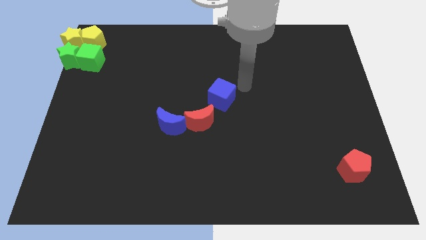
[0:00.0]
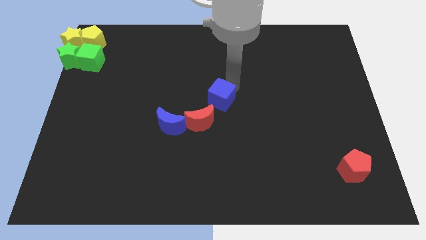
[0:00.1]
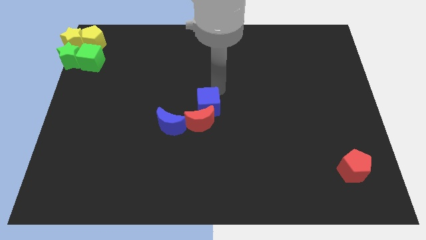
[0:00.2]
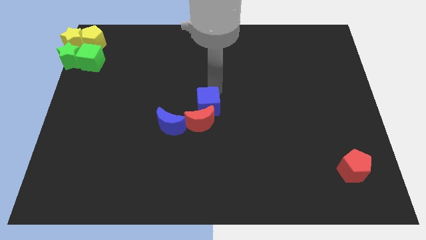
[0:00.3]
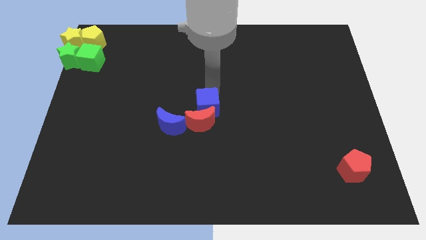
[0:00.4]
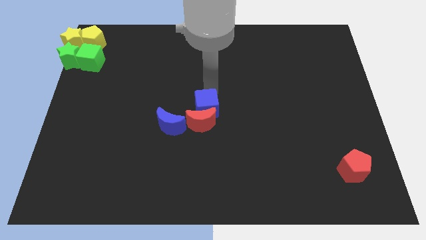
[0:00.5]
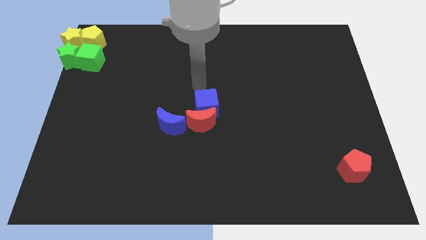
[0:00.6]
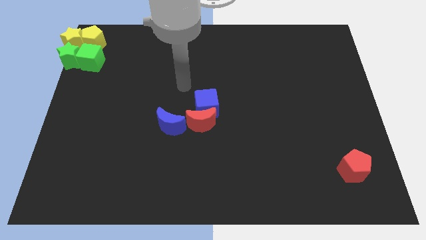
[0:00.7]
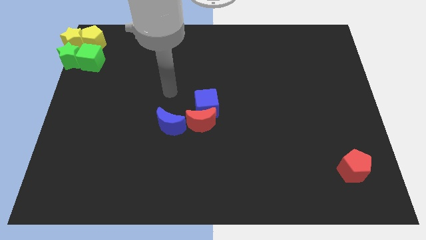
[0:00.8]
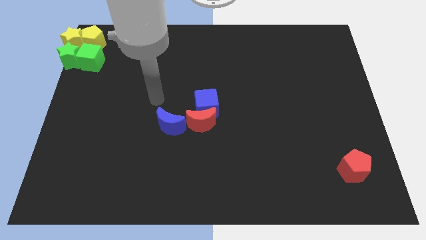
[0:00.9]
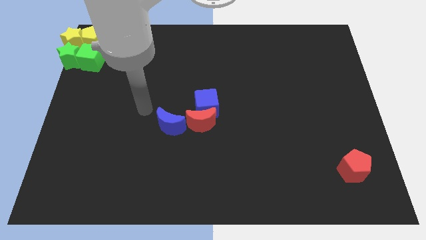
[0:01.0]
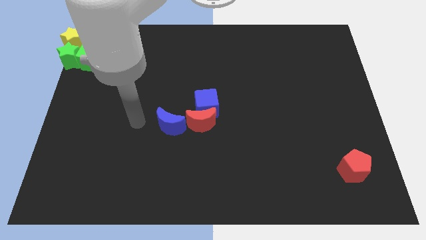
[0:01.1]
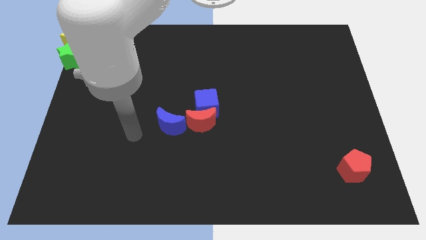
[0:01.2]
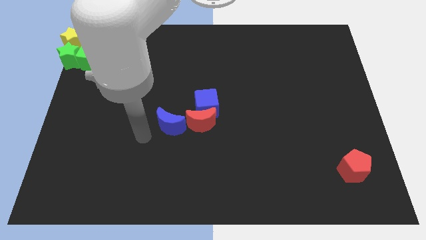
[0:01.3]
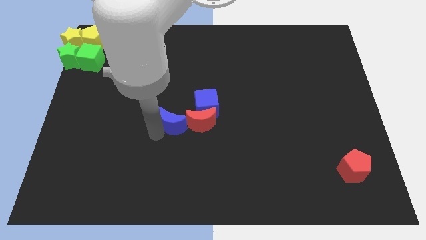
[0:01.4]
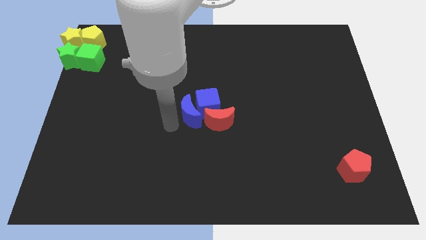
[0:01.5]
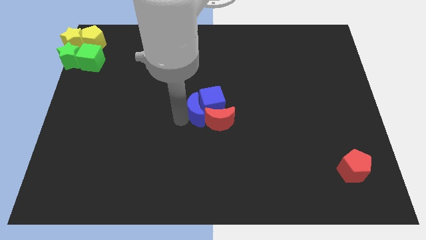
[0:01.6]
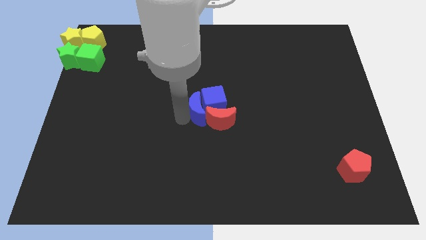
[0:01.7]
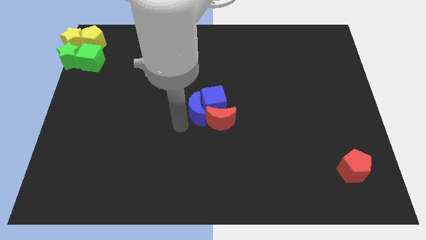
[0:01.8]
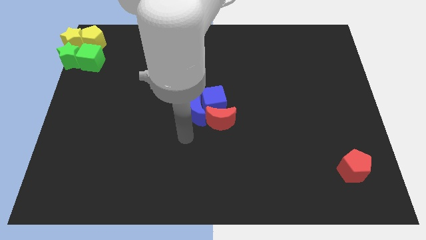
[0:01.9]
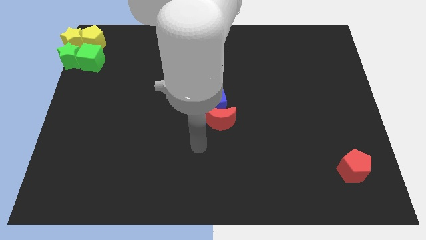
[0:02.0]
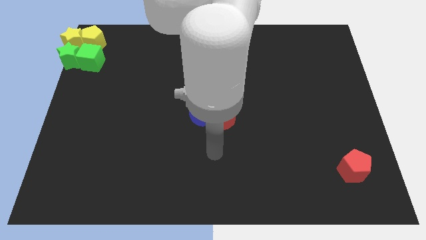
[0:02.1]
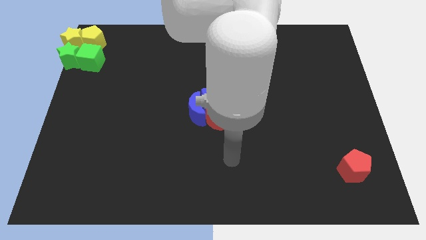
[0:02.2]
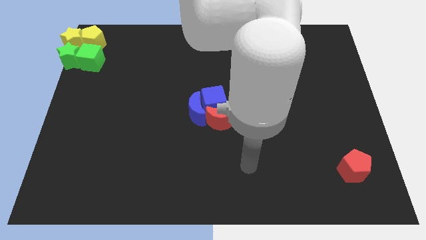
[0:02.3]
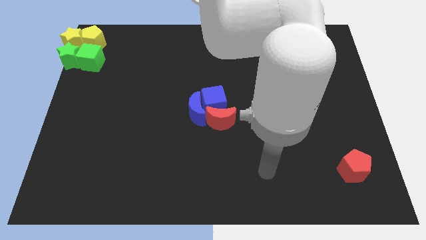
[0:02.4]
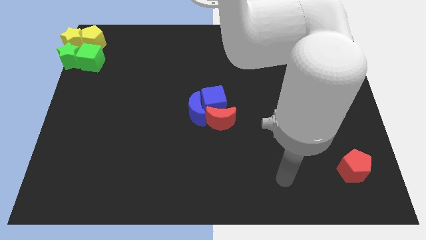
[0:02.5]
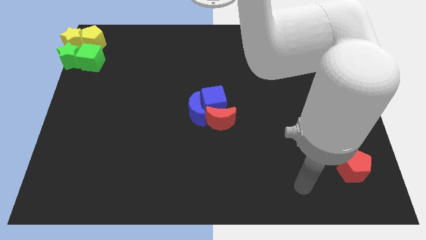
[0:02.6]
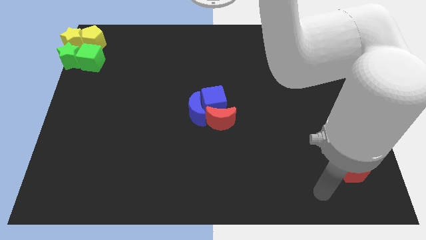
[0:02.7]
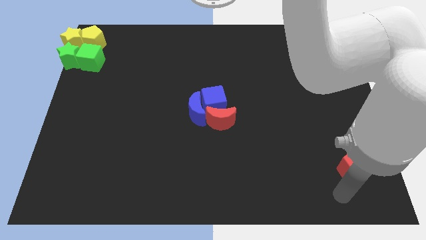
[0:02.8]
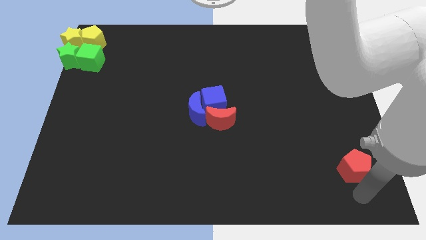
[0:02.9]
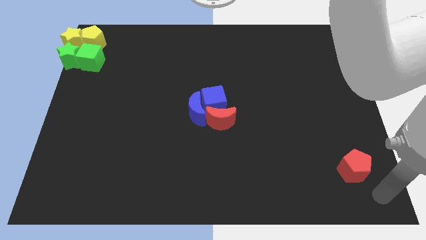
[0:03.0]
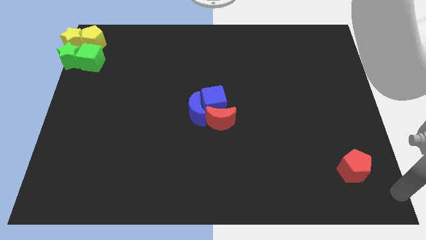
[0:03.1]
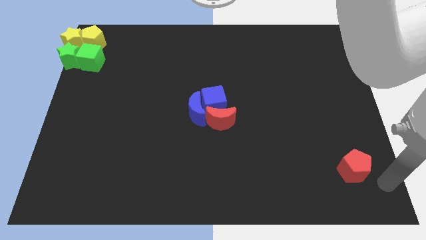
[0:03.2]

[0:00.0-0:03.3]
adjust the blue blocks and the red moon at the center of the board

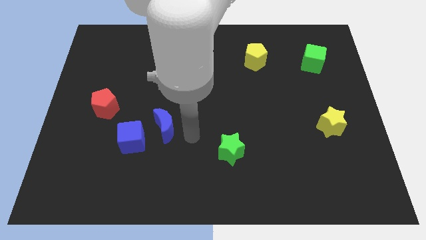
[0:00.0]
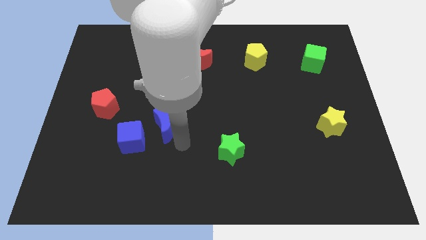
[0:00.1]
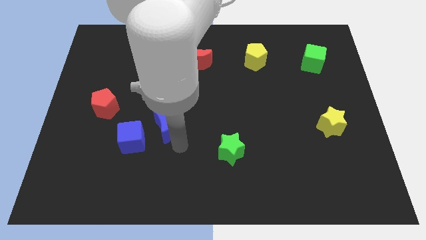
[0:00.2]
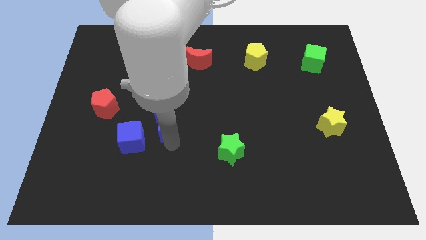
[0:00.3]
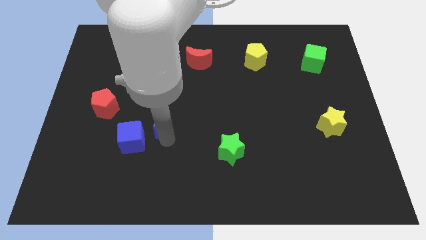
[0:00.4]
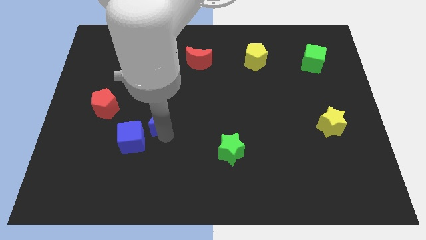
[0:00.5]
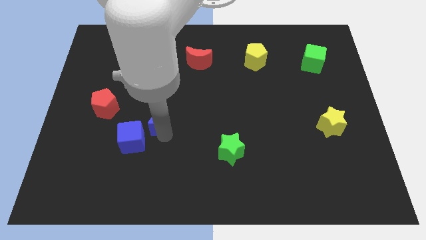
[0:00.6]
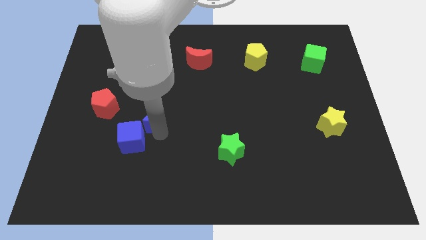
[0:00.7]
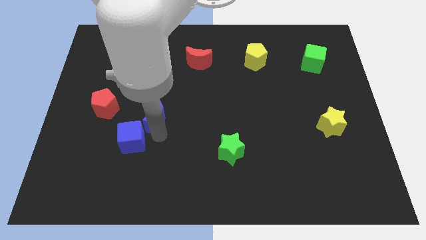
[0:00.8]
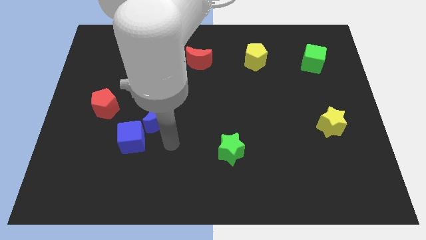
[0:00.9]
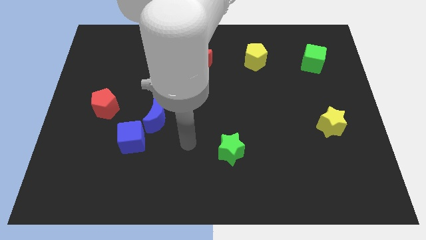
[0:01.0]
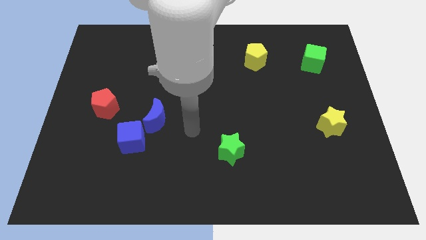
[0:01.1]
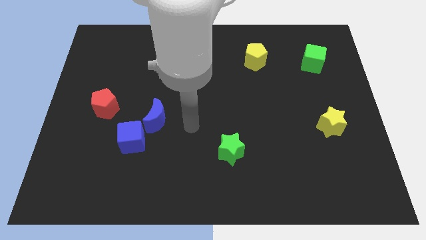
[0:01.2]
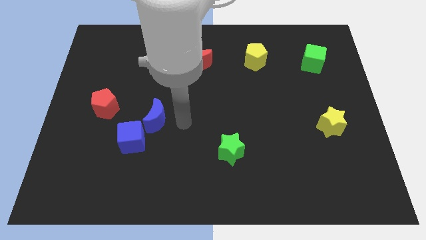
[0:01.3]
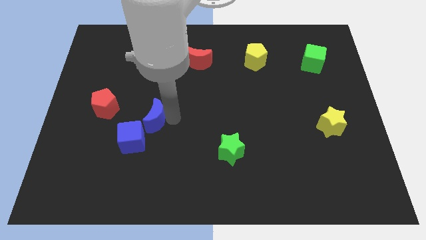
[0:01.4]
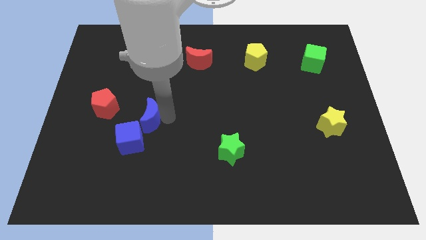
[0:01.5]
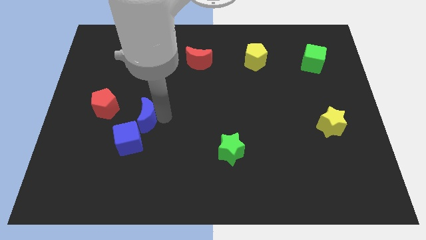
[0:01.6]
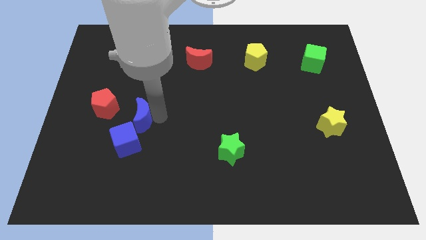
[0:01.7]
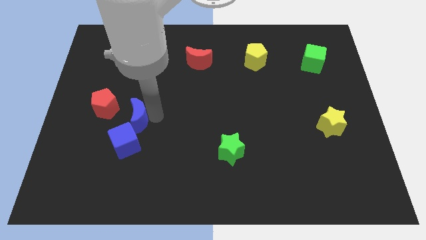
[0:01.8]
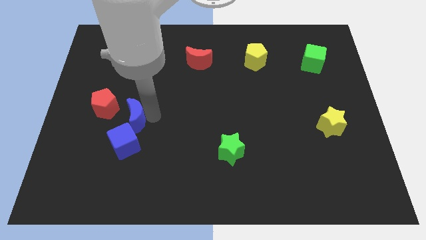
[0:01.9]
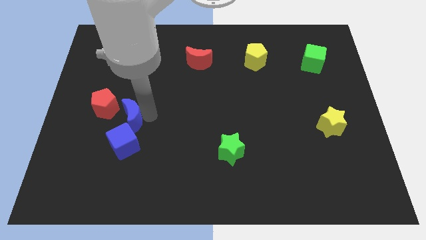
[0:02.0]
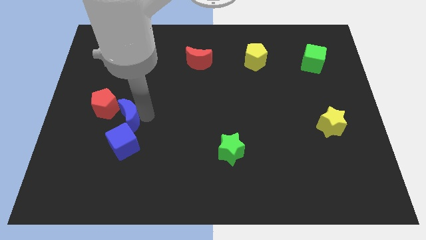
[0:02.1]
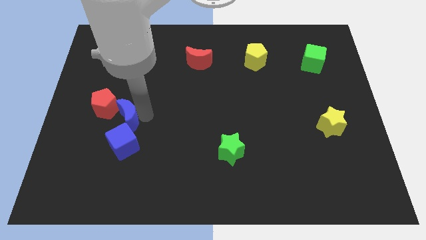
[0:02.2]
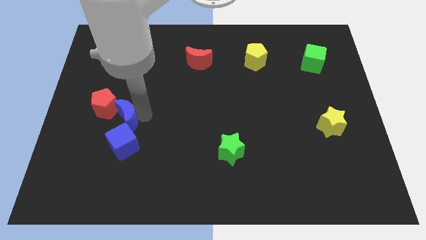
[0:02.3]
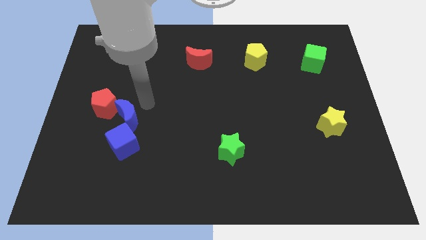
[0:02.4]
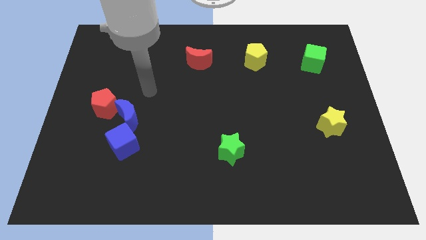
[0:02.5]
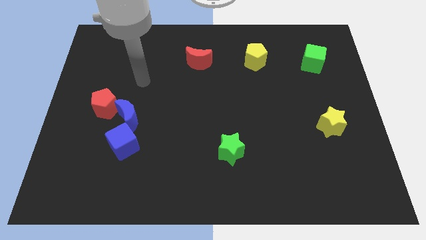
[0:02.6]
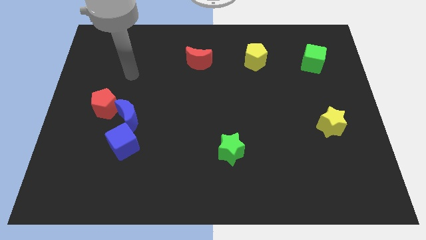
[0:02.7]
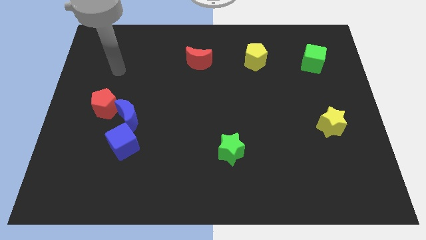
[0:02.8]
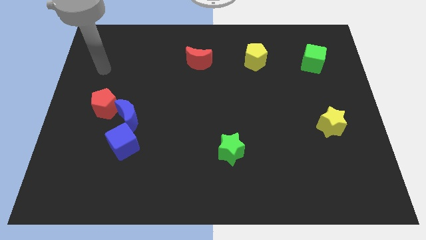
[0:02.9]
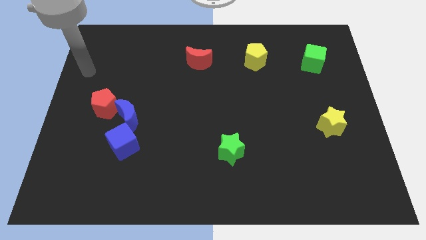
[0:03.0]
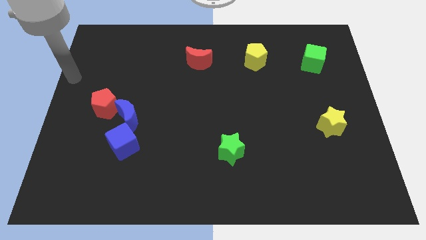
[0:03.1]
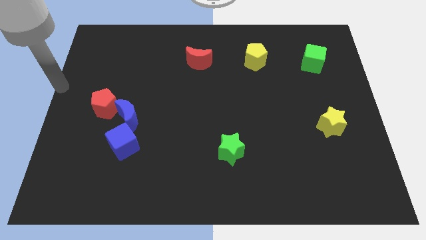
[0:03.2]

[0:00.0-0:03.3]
push the blue cube with the blue moon

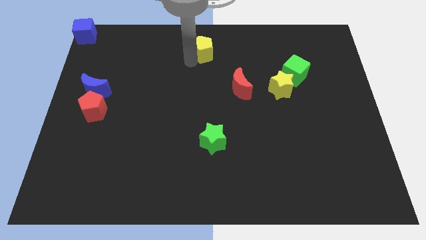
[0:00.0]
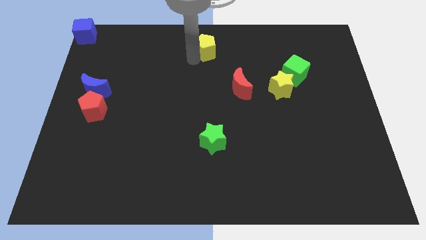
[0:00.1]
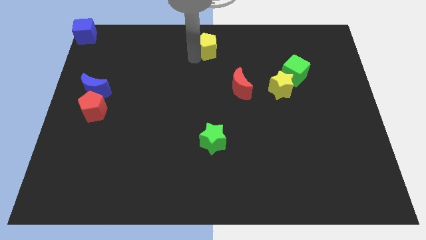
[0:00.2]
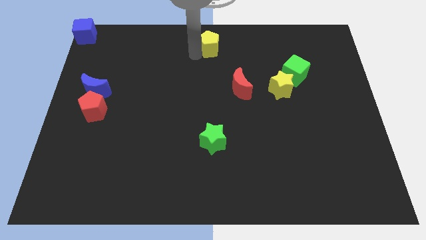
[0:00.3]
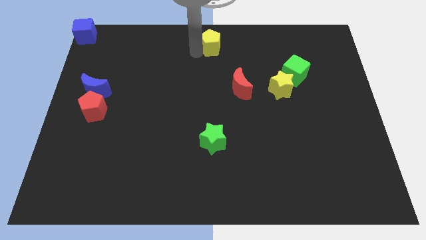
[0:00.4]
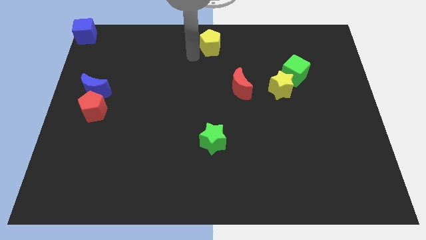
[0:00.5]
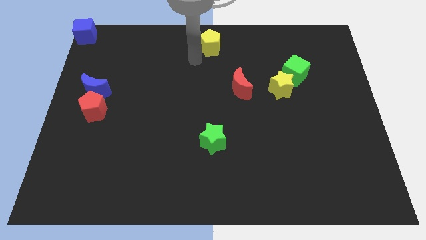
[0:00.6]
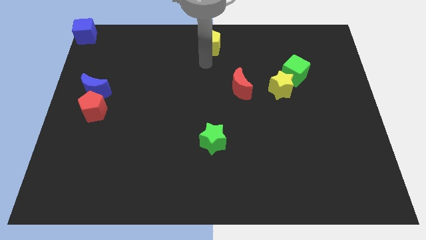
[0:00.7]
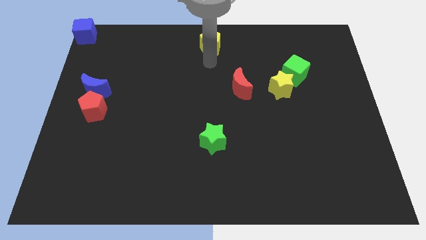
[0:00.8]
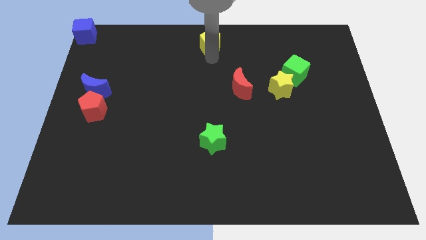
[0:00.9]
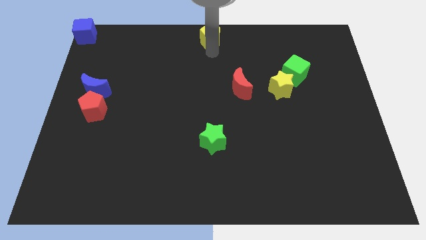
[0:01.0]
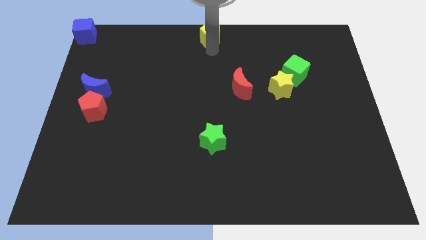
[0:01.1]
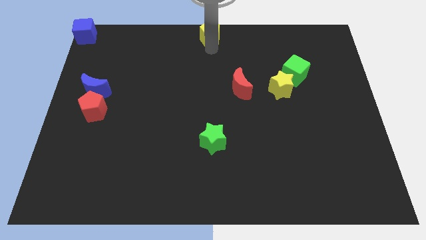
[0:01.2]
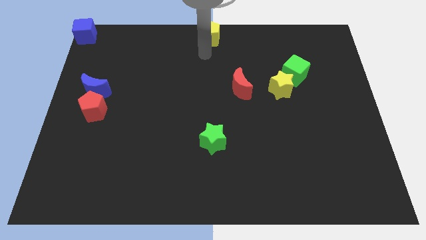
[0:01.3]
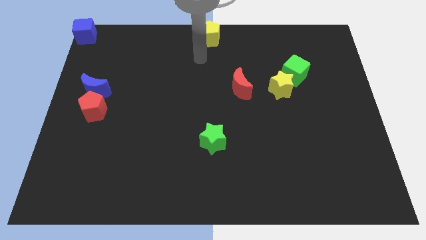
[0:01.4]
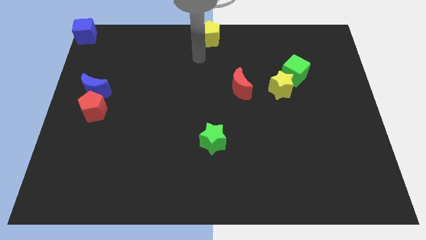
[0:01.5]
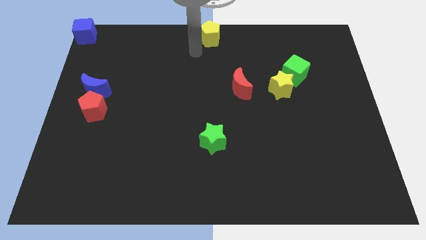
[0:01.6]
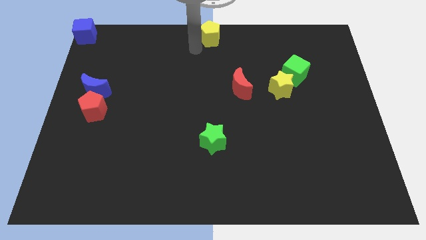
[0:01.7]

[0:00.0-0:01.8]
push the yellow pentagon to the top center of the board

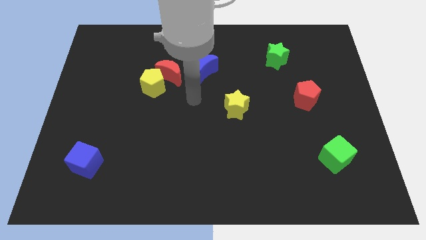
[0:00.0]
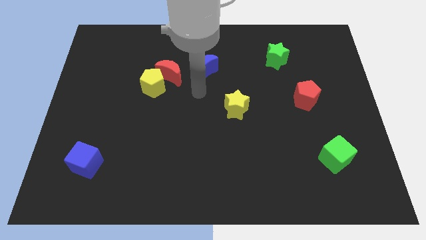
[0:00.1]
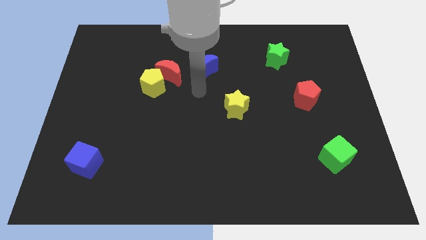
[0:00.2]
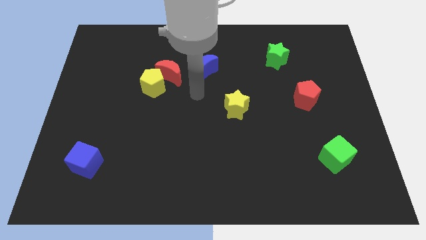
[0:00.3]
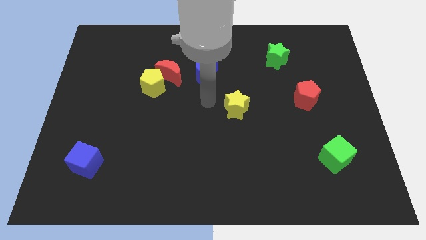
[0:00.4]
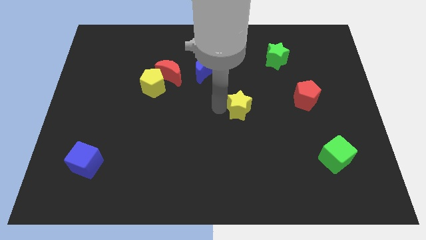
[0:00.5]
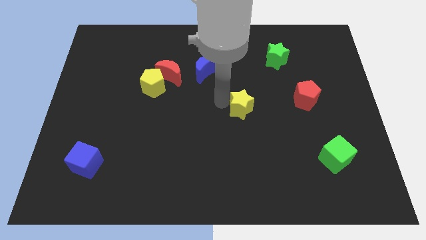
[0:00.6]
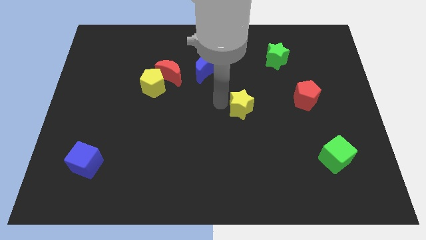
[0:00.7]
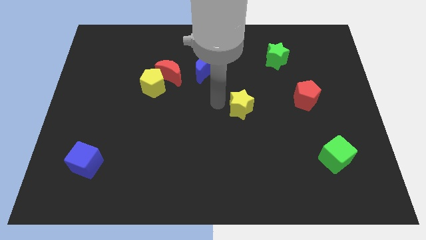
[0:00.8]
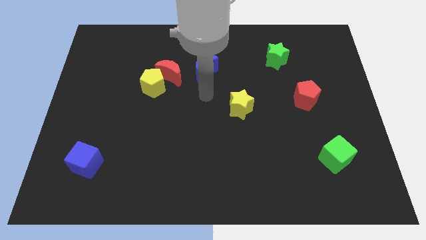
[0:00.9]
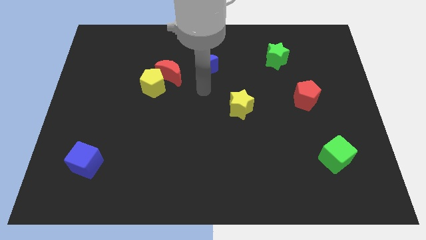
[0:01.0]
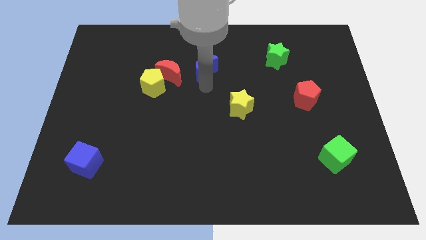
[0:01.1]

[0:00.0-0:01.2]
move the yellow star slightly to the right of the board
